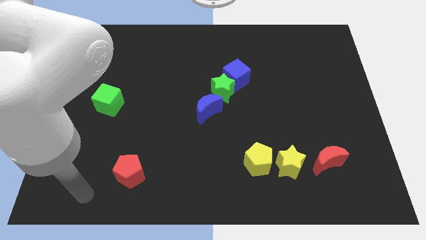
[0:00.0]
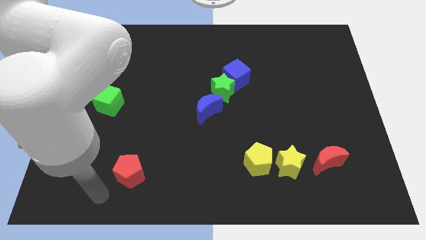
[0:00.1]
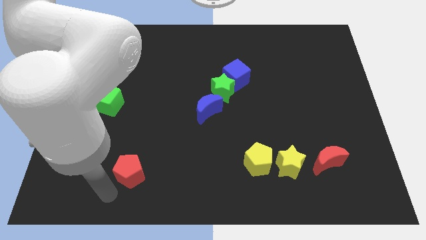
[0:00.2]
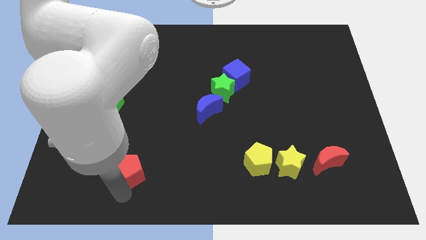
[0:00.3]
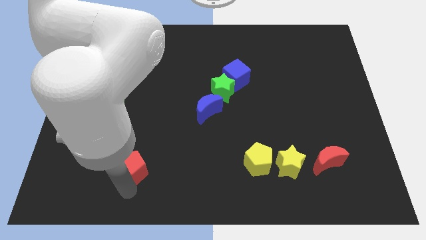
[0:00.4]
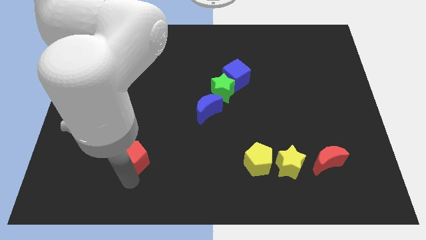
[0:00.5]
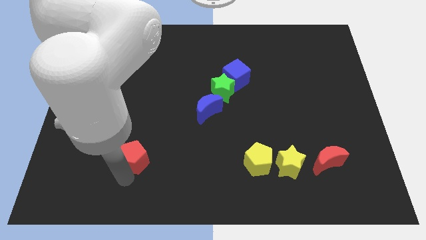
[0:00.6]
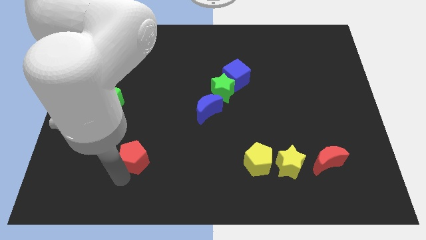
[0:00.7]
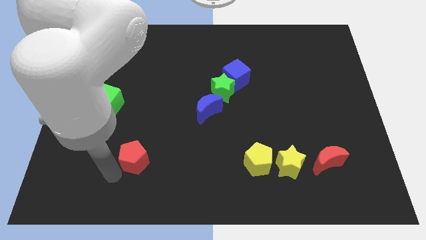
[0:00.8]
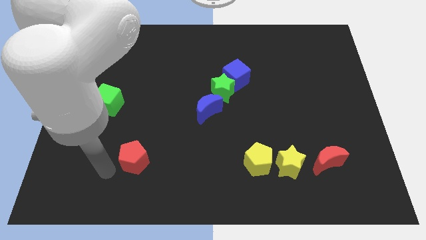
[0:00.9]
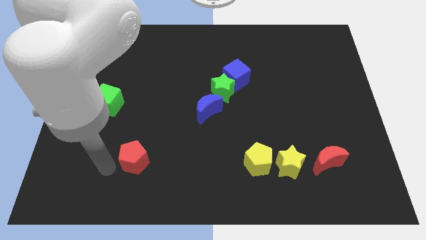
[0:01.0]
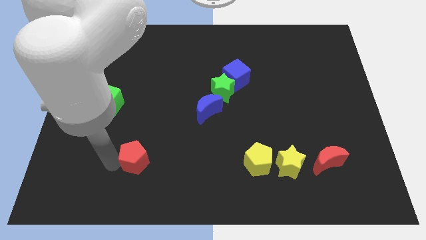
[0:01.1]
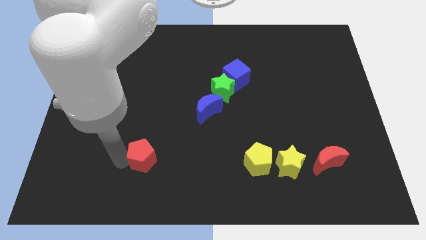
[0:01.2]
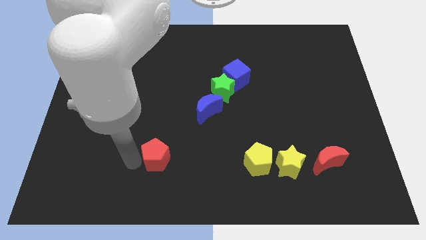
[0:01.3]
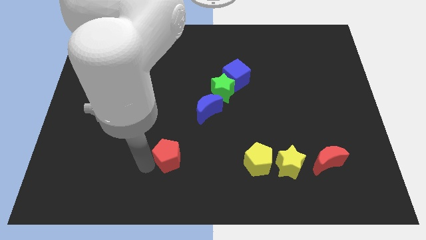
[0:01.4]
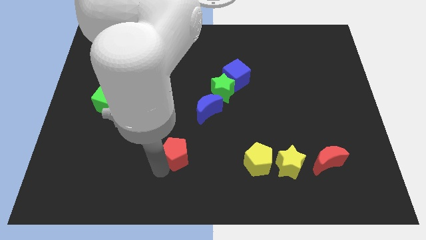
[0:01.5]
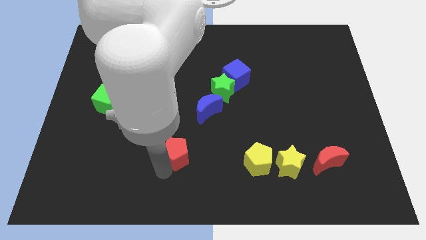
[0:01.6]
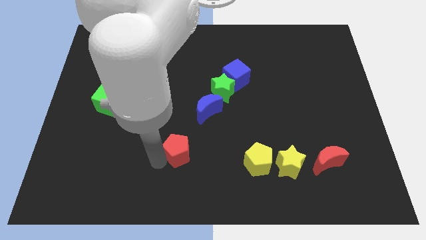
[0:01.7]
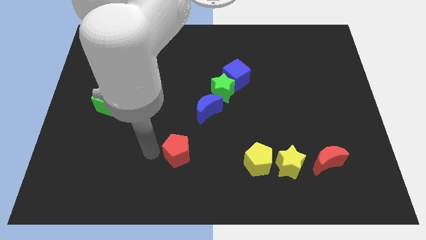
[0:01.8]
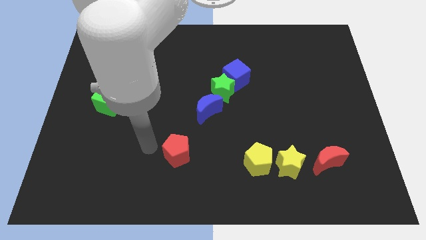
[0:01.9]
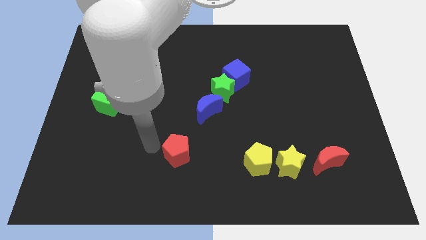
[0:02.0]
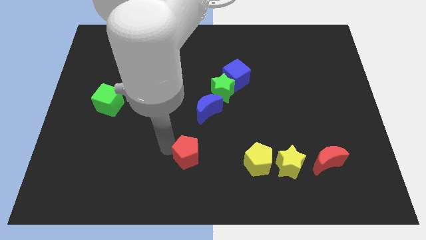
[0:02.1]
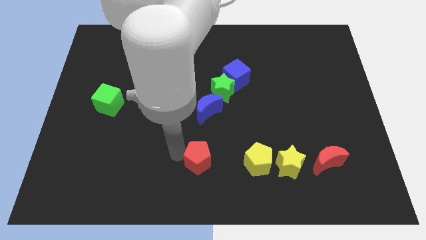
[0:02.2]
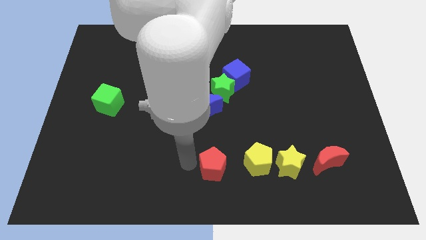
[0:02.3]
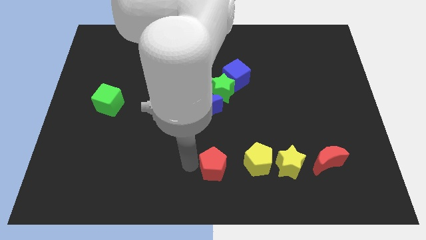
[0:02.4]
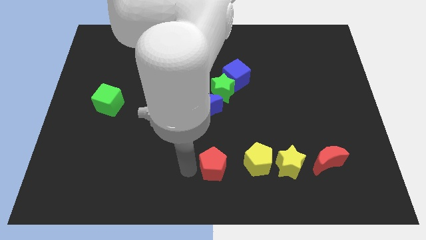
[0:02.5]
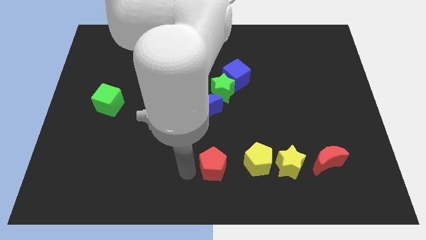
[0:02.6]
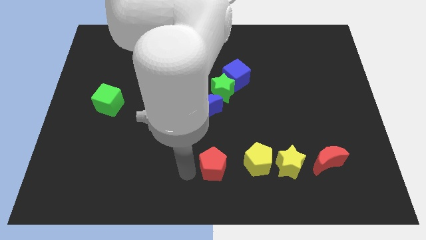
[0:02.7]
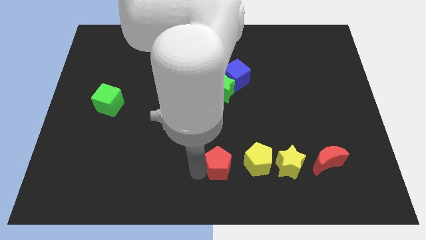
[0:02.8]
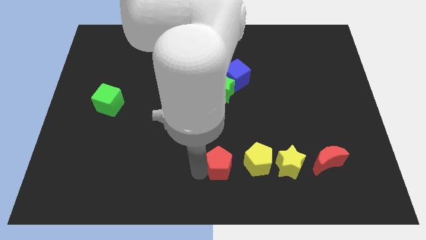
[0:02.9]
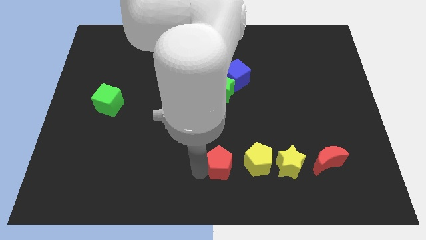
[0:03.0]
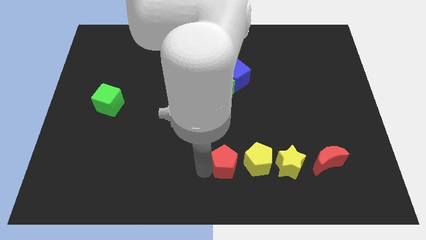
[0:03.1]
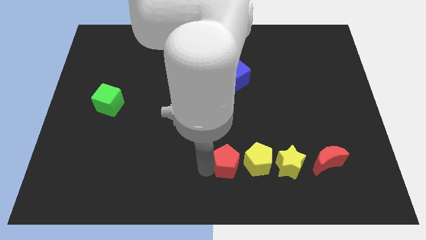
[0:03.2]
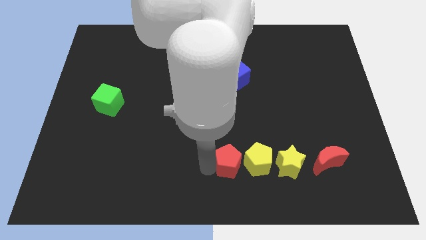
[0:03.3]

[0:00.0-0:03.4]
move the red pentagon to the left of the yellow pentagon

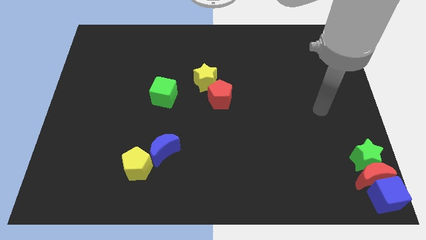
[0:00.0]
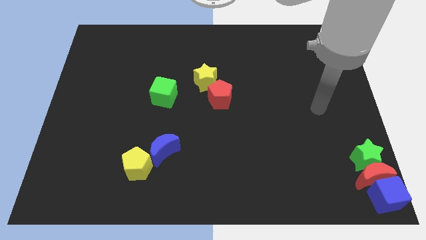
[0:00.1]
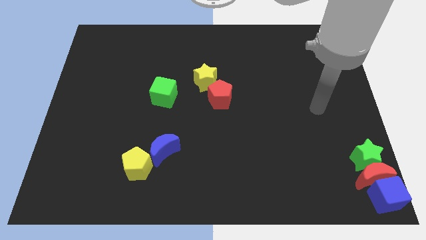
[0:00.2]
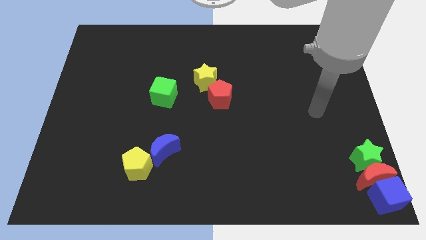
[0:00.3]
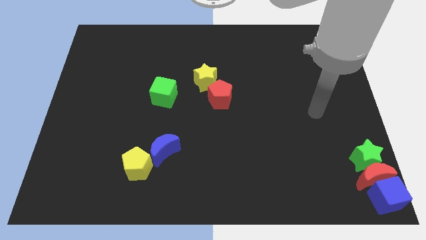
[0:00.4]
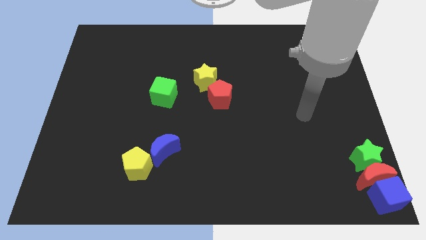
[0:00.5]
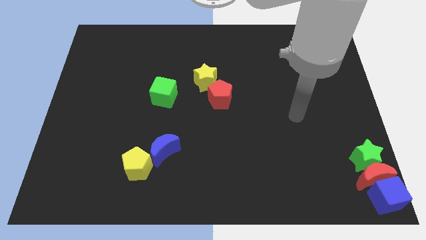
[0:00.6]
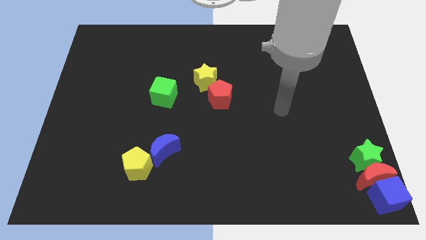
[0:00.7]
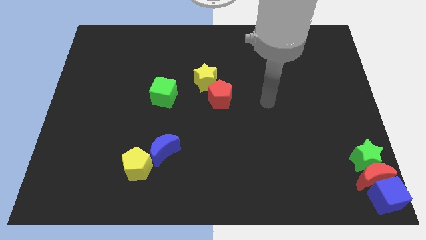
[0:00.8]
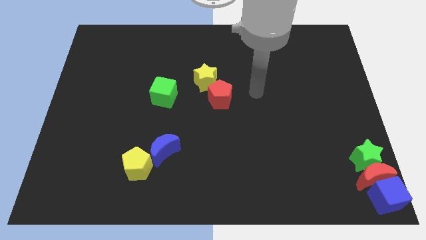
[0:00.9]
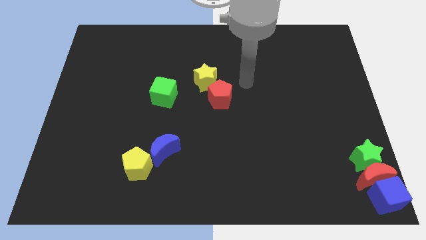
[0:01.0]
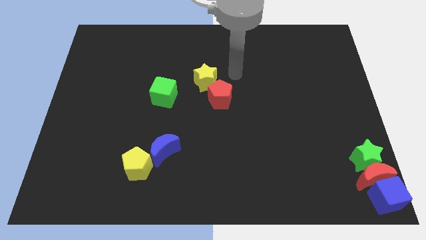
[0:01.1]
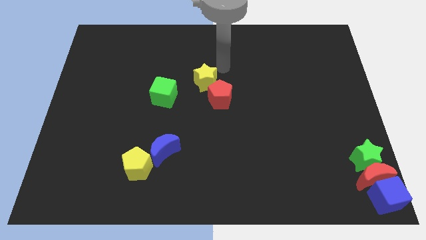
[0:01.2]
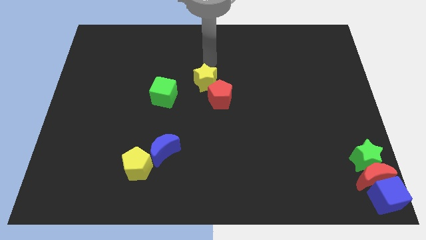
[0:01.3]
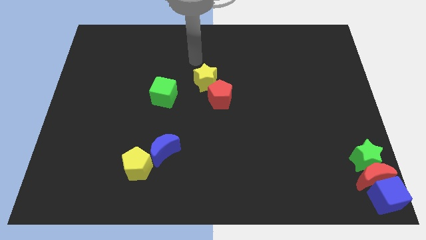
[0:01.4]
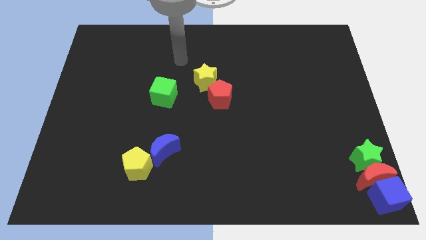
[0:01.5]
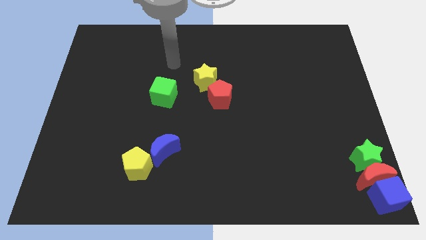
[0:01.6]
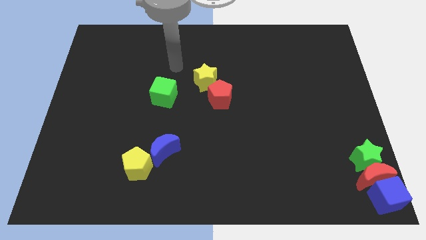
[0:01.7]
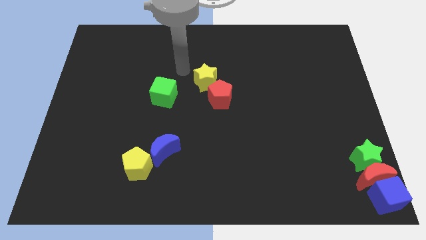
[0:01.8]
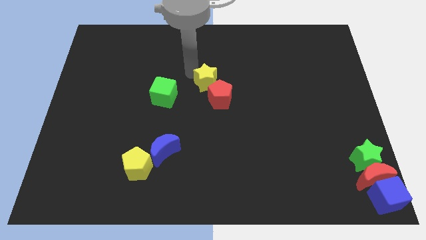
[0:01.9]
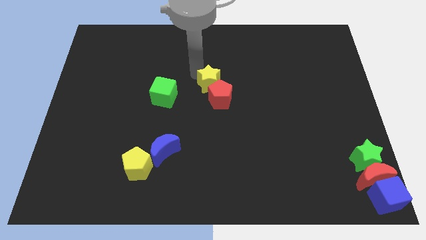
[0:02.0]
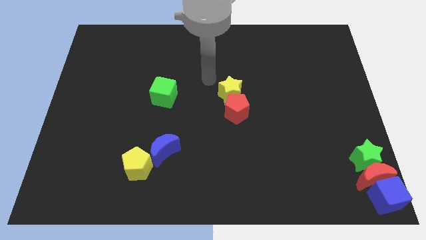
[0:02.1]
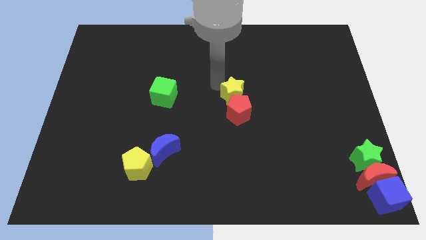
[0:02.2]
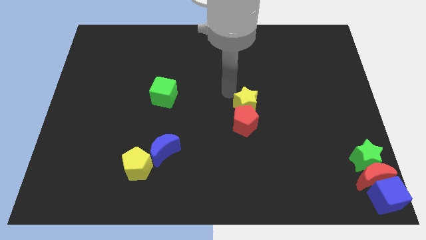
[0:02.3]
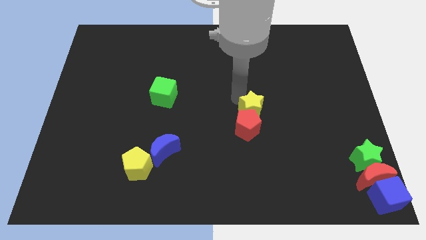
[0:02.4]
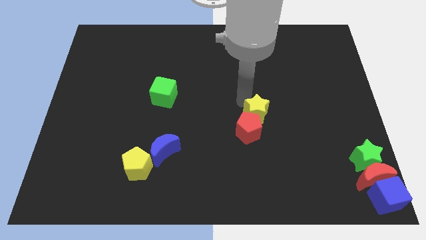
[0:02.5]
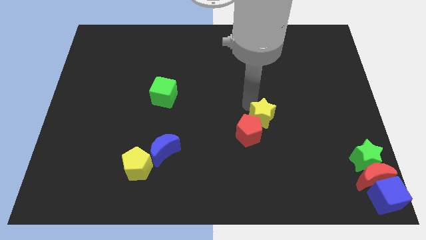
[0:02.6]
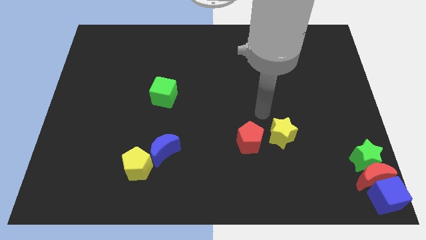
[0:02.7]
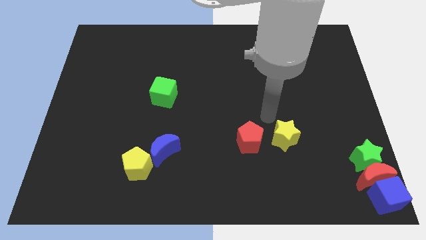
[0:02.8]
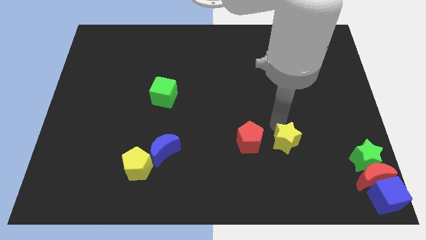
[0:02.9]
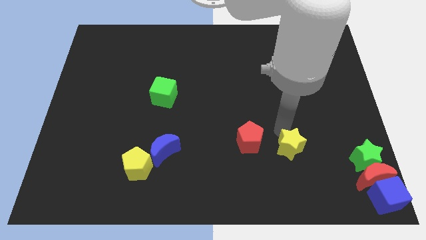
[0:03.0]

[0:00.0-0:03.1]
push the red pentagon with a yellow star downwards

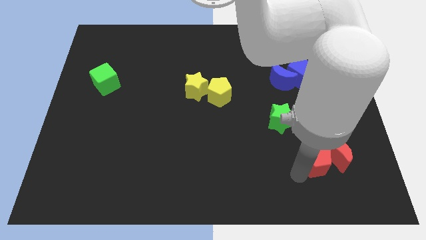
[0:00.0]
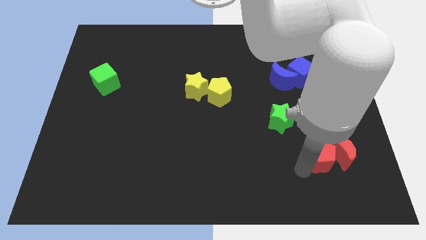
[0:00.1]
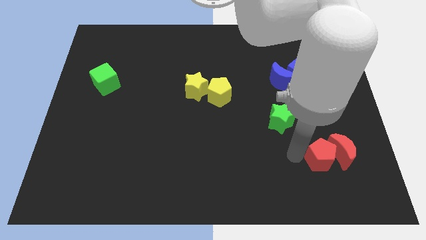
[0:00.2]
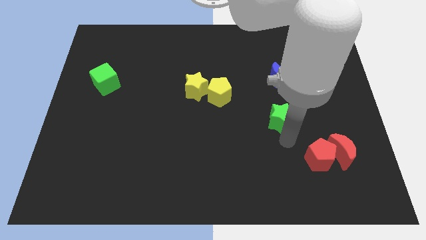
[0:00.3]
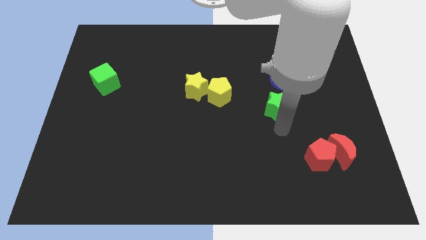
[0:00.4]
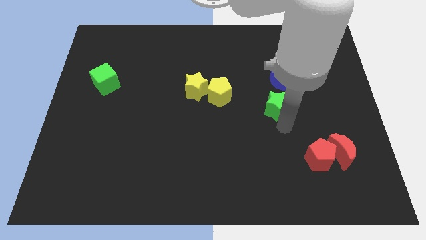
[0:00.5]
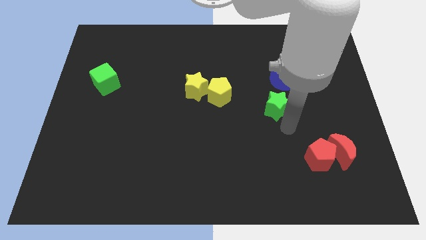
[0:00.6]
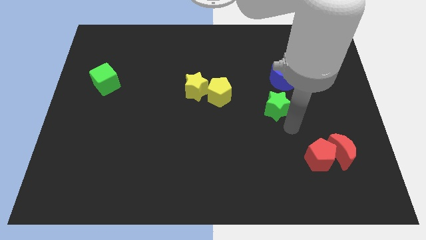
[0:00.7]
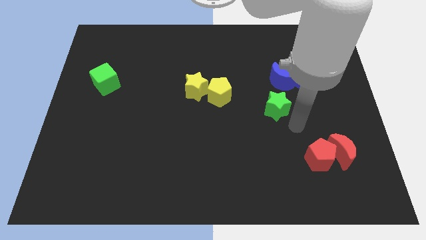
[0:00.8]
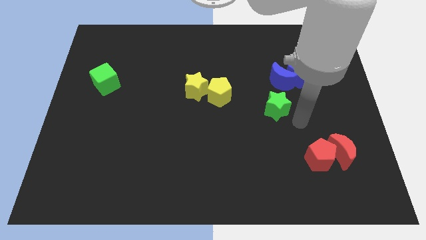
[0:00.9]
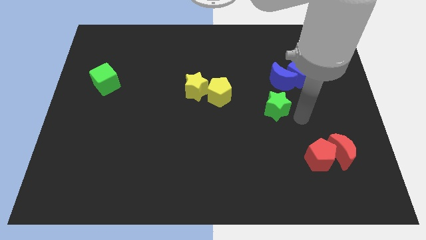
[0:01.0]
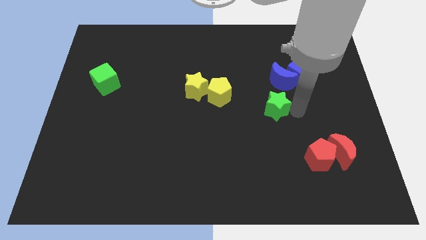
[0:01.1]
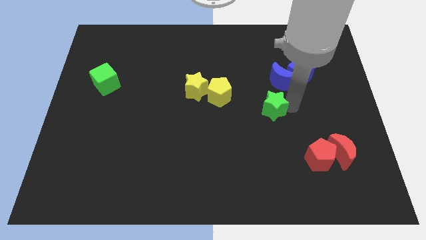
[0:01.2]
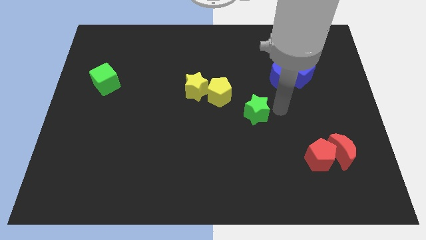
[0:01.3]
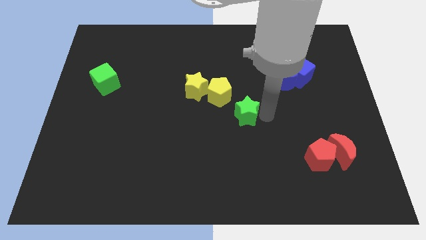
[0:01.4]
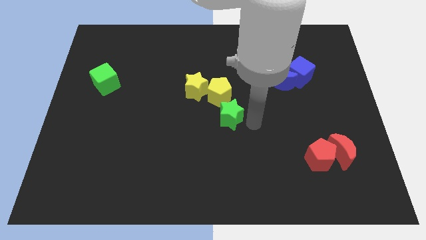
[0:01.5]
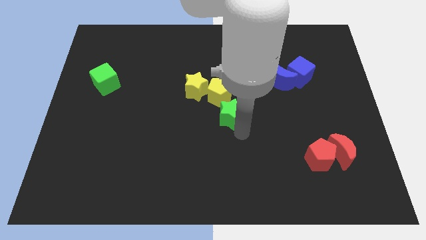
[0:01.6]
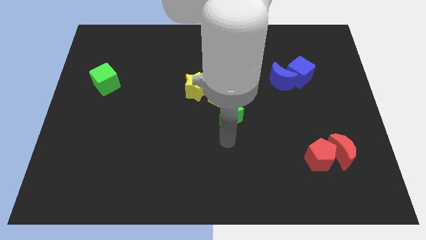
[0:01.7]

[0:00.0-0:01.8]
move the green star to the center

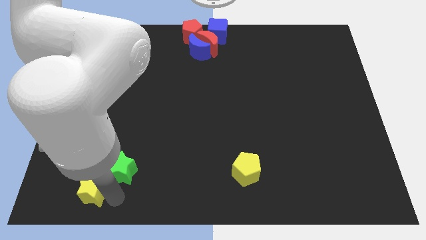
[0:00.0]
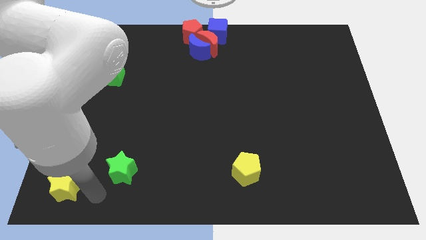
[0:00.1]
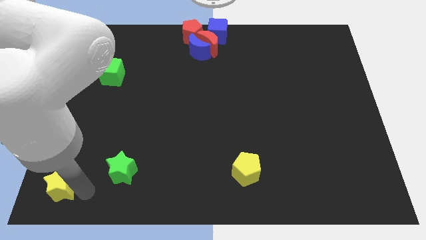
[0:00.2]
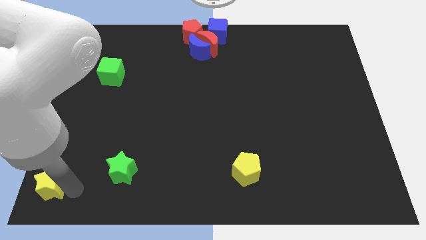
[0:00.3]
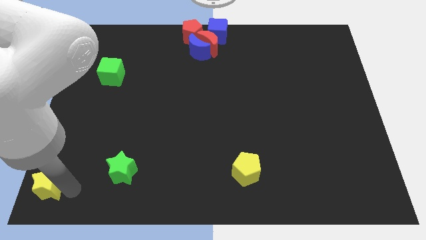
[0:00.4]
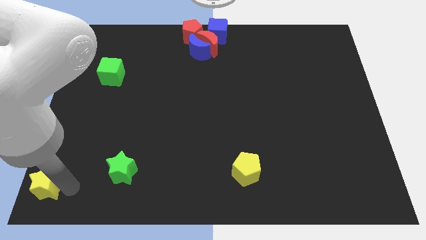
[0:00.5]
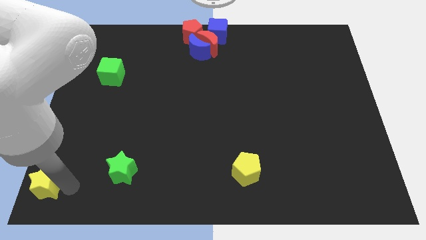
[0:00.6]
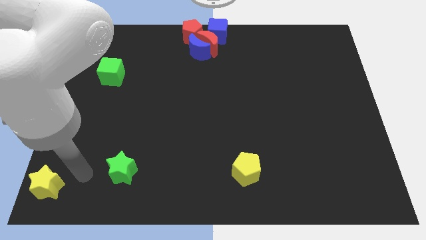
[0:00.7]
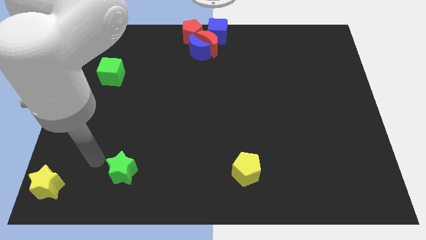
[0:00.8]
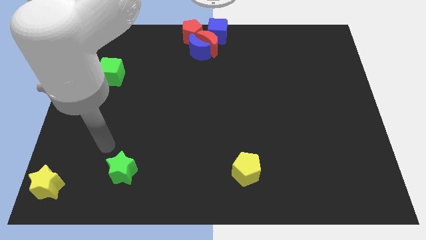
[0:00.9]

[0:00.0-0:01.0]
move the yellow star towards the bottom left corner
